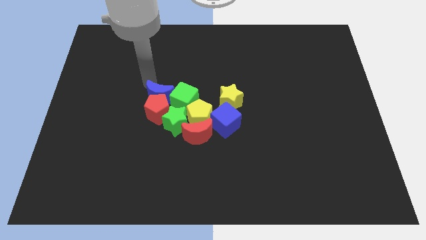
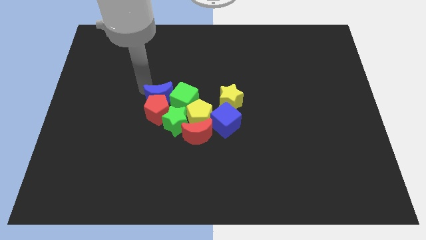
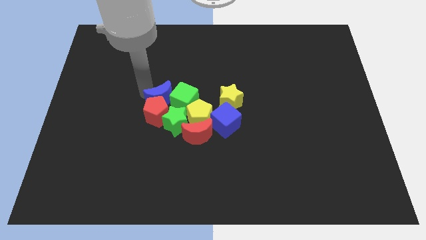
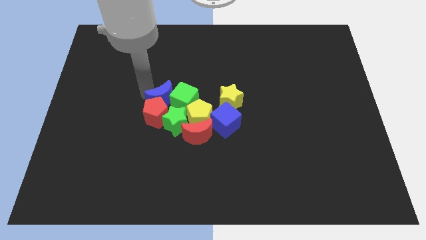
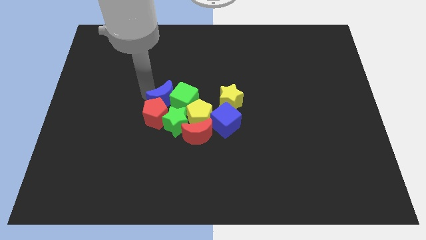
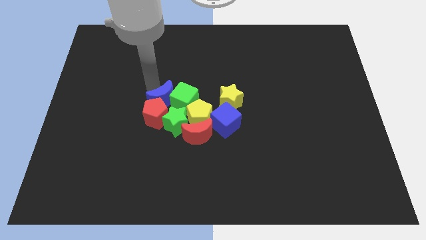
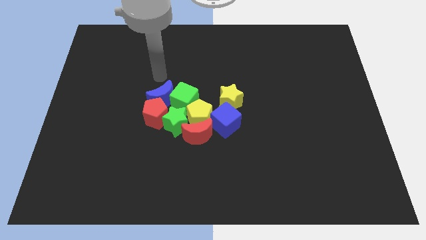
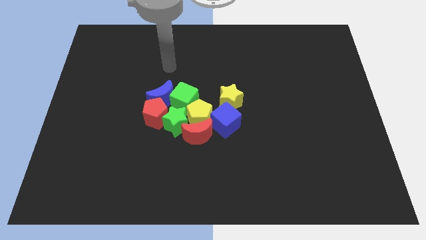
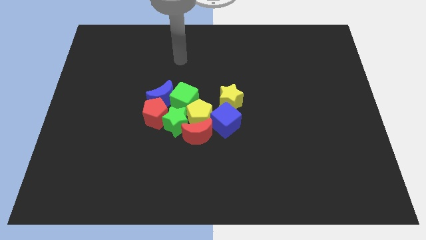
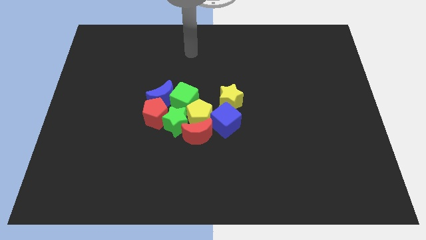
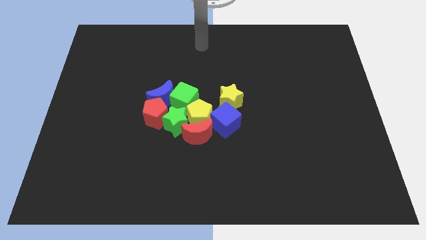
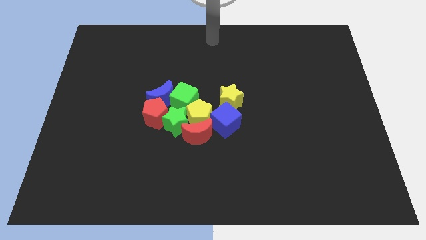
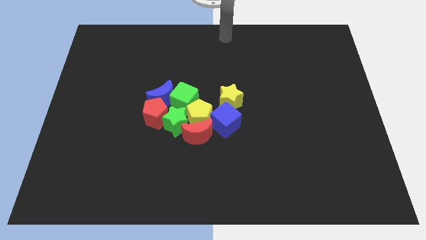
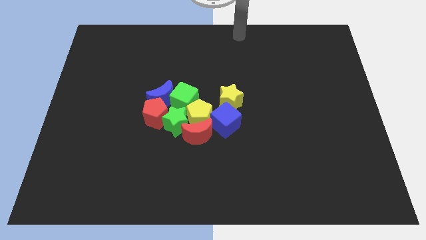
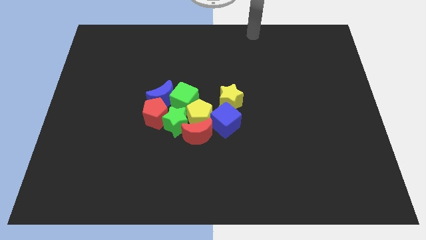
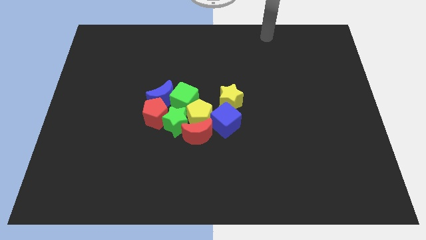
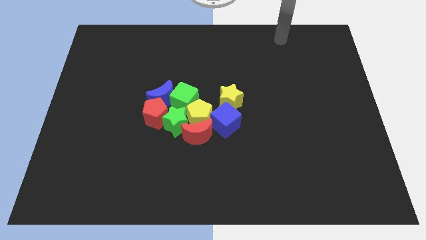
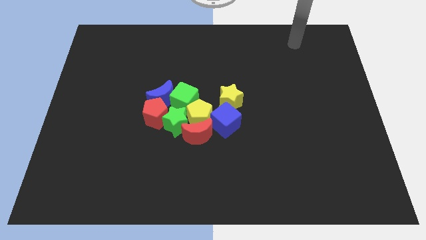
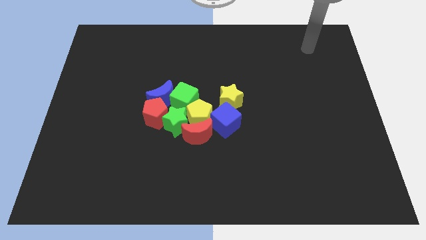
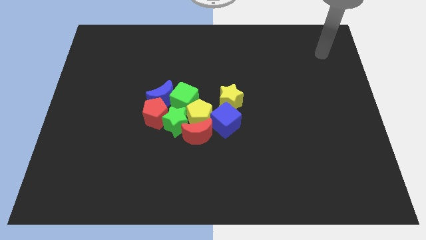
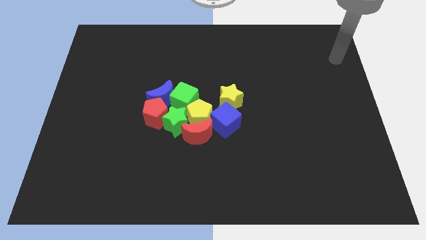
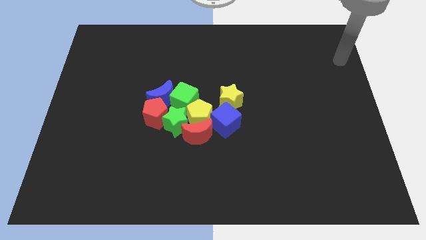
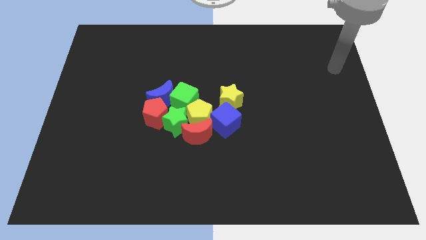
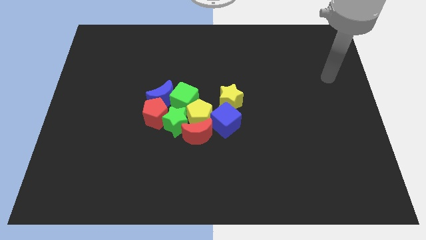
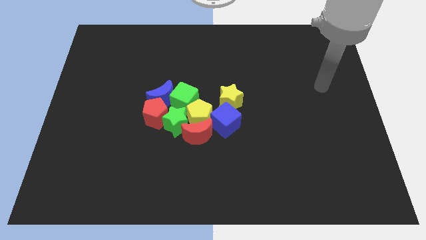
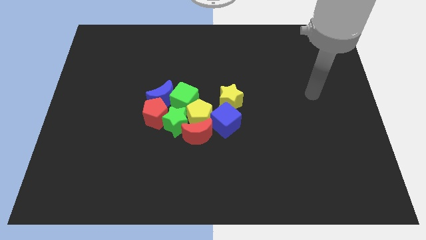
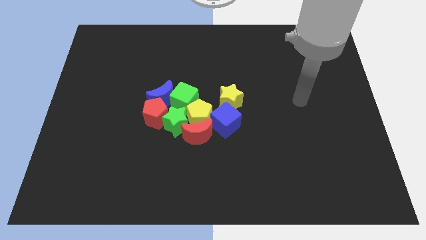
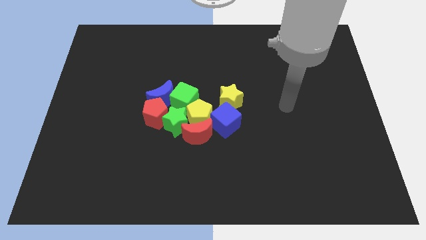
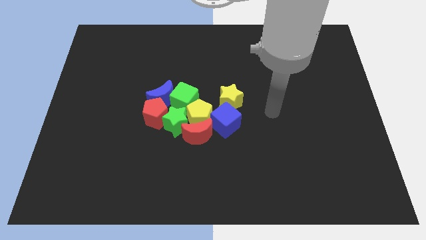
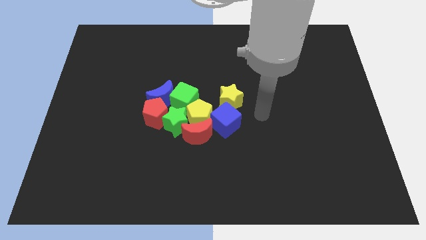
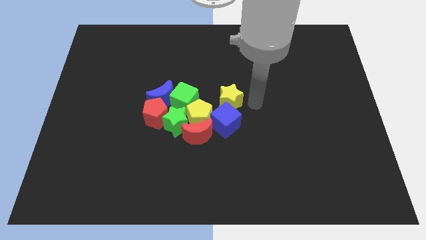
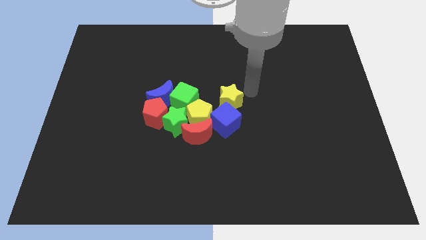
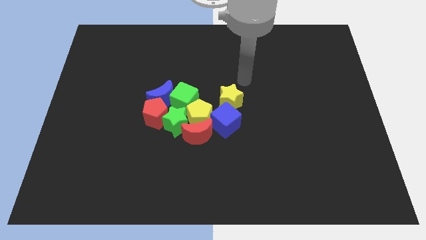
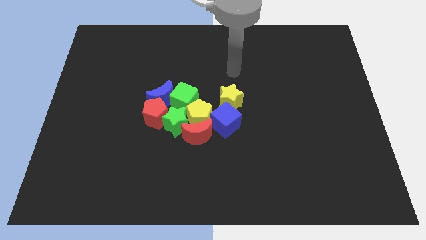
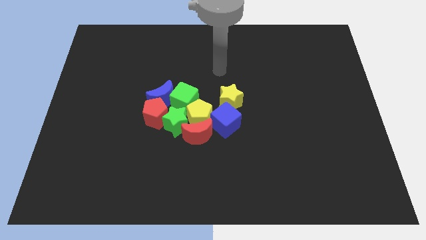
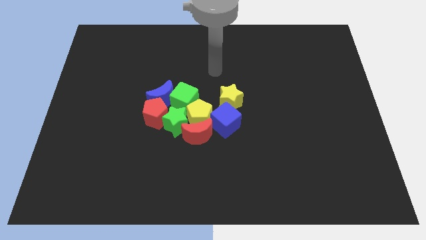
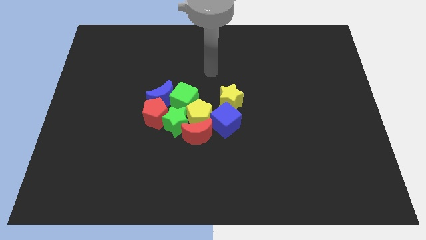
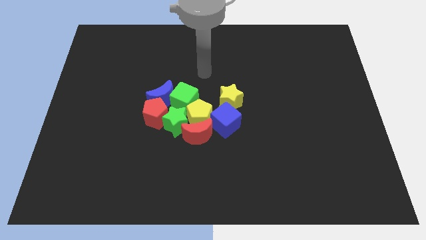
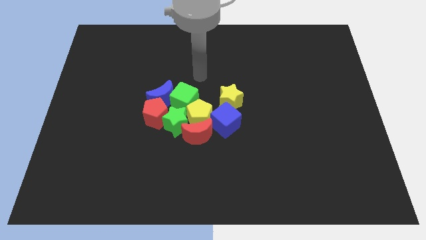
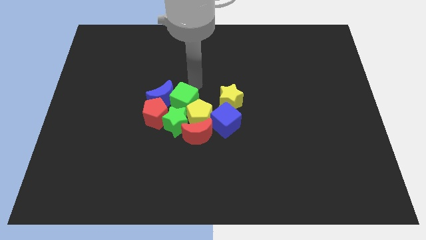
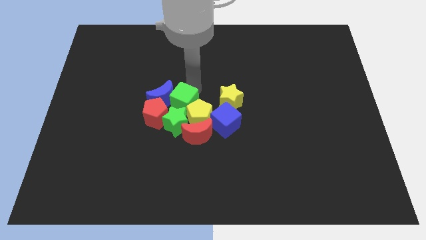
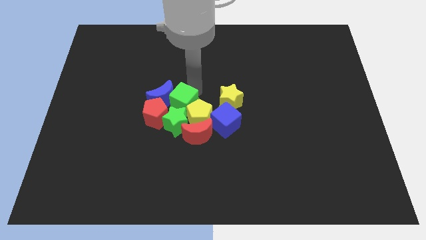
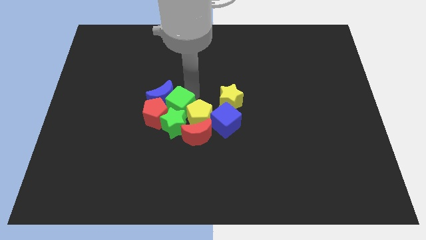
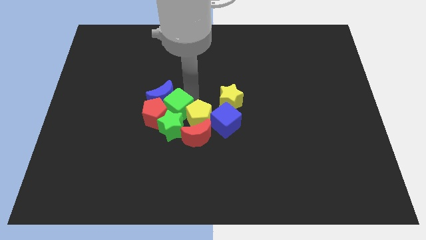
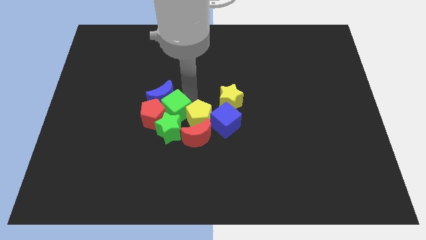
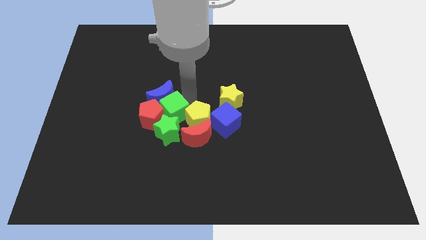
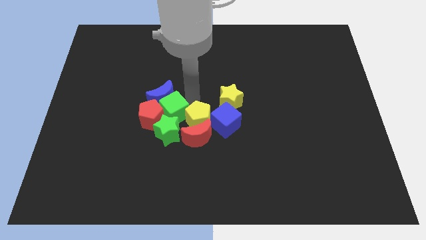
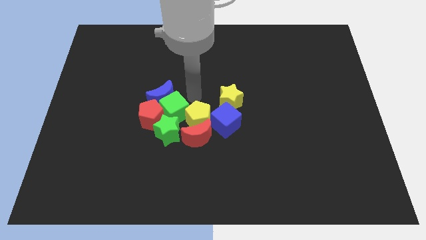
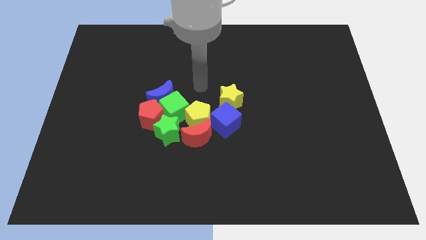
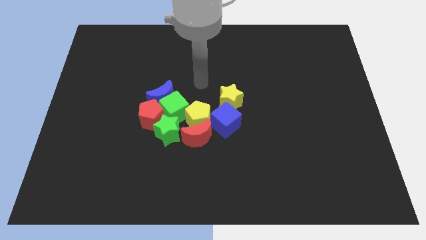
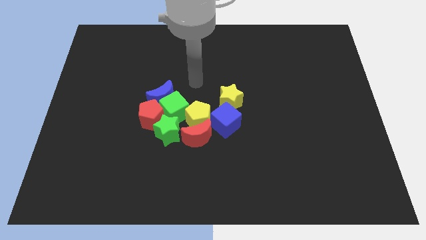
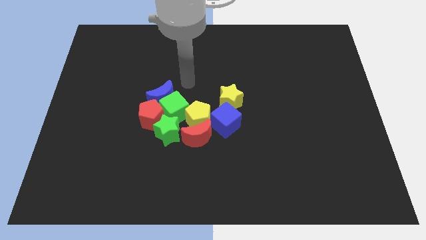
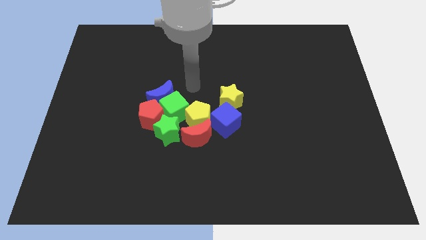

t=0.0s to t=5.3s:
slightly push the green blocks downwards

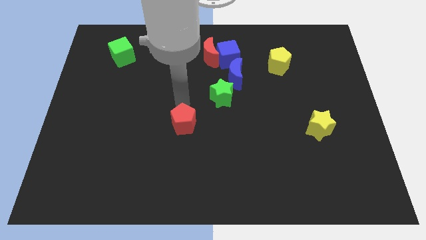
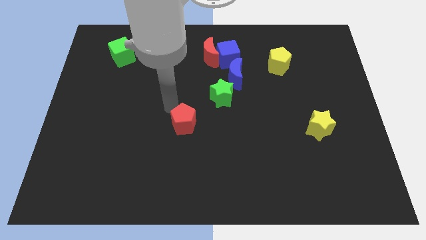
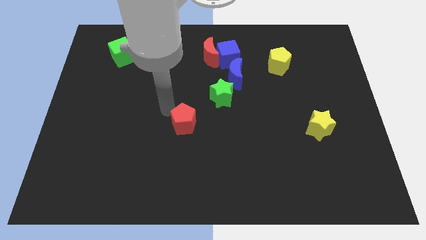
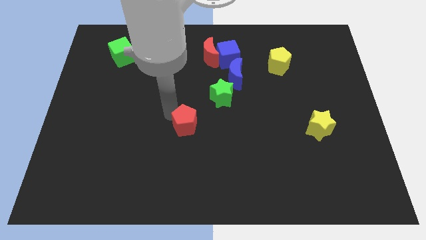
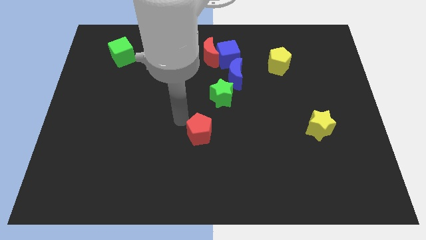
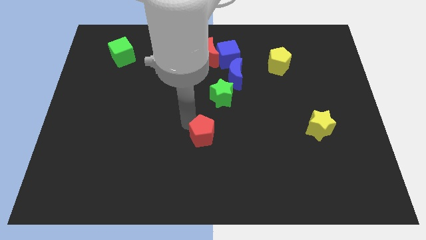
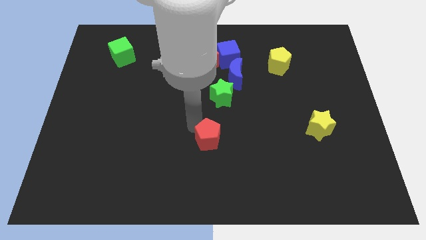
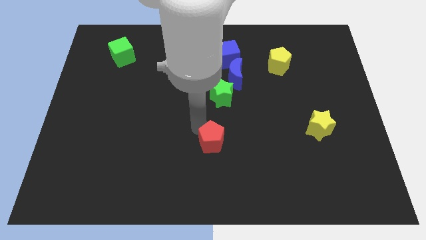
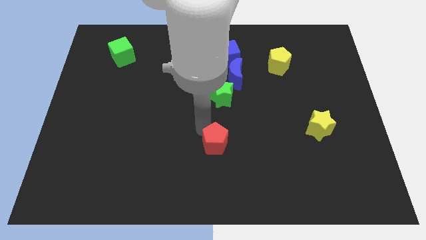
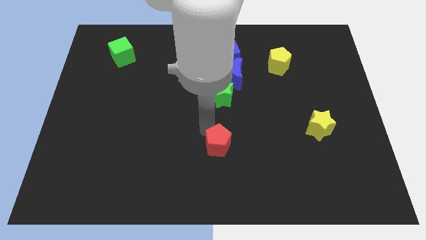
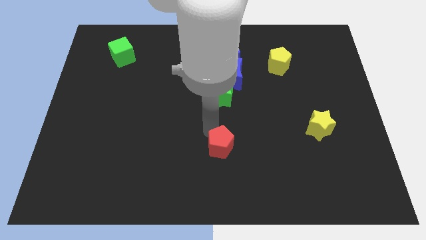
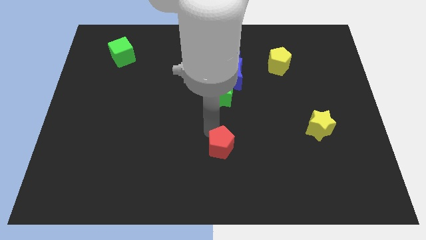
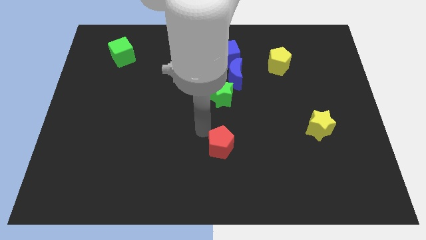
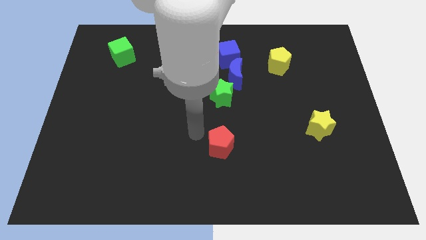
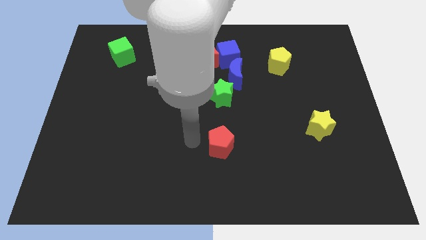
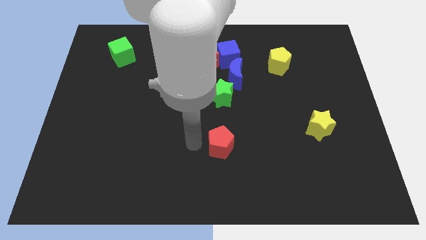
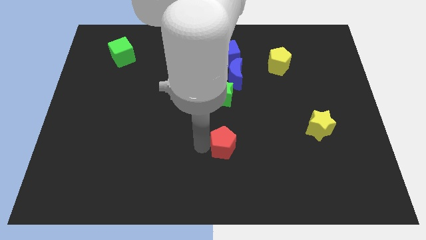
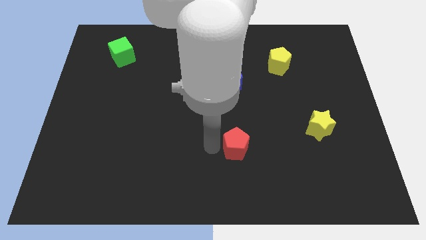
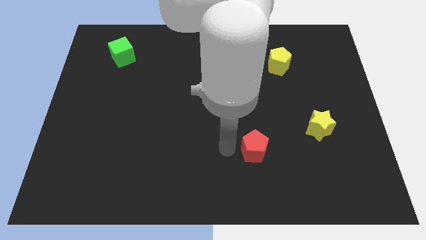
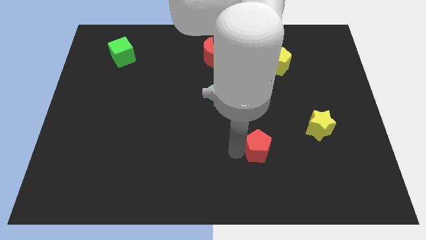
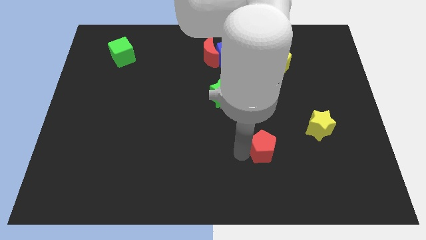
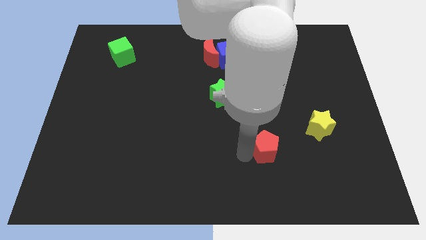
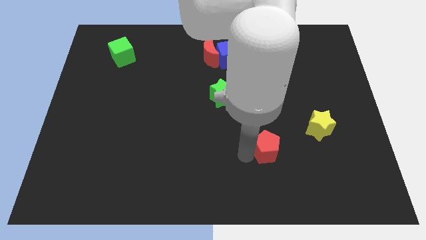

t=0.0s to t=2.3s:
push the red pentagon towards the right

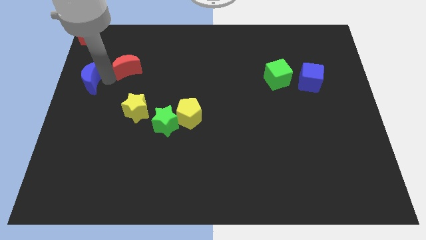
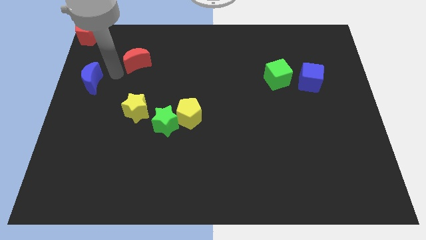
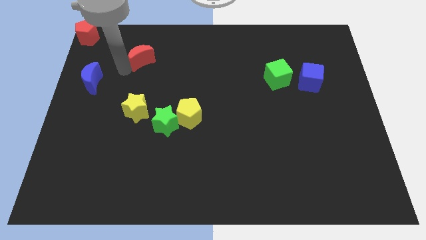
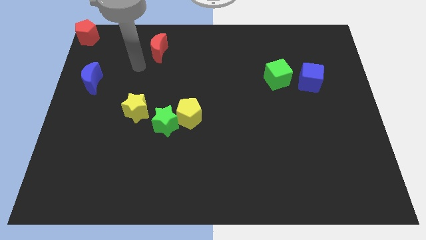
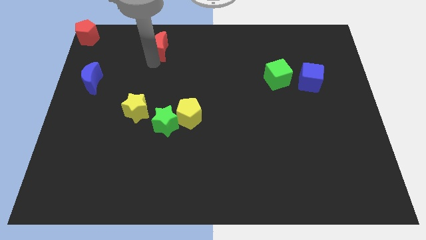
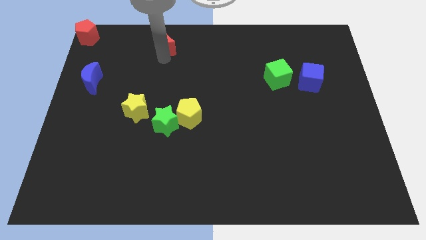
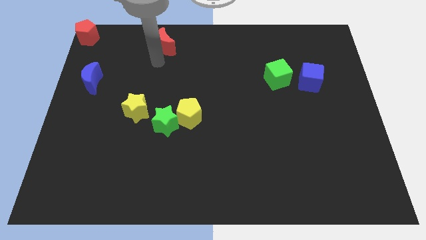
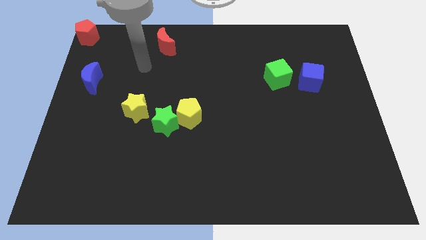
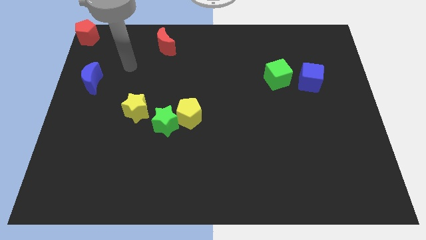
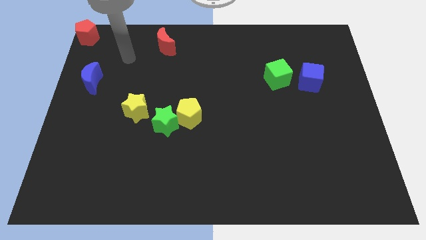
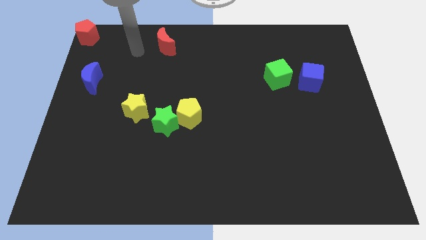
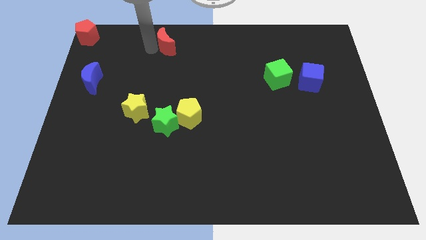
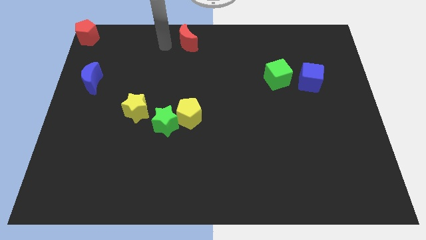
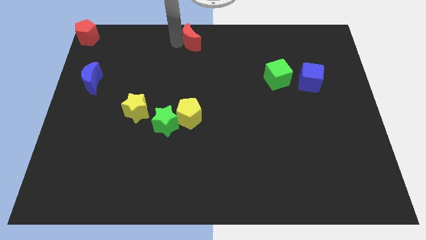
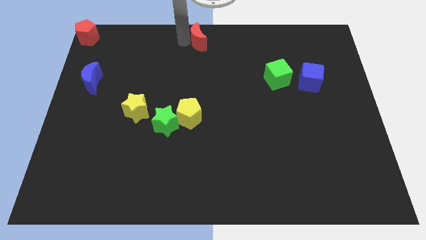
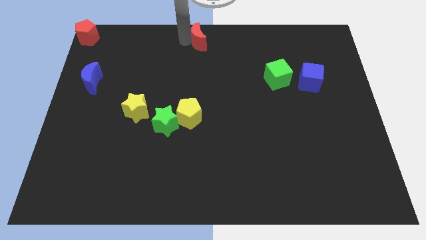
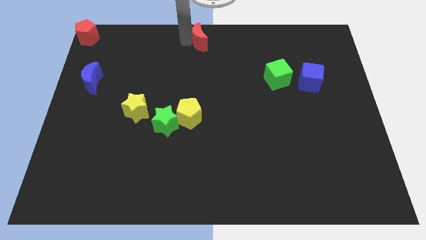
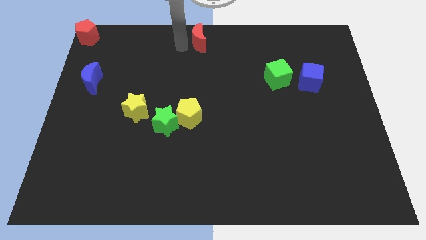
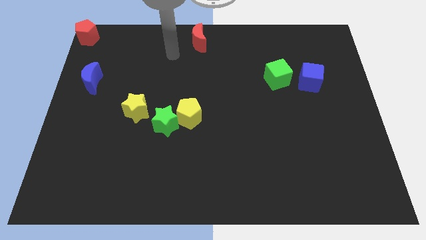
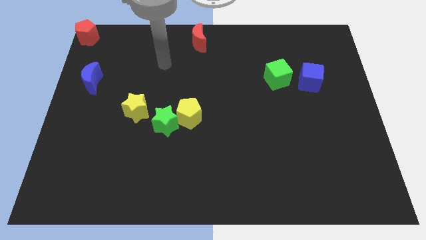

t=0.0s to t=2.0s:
push the red crescent to the top center of the board
